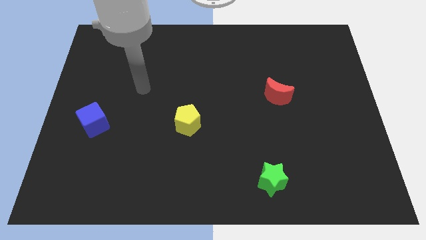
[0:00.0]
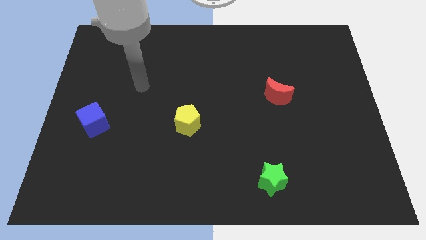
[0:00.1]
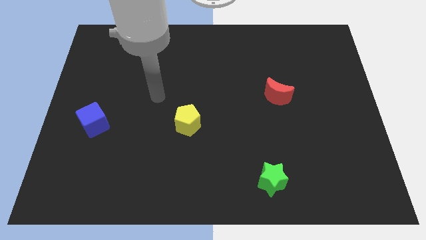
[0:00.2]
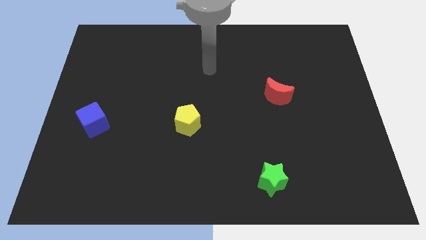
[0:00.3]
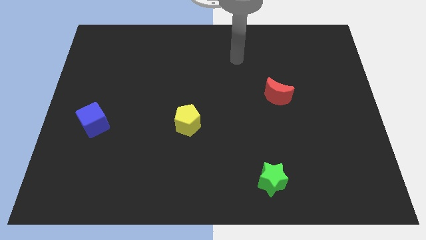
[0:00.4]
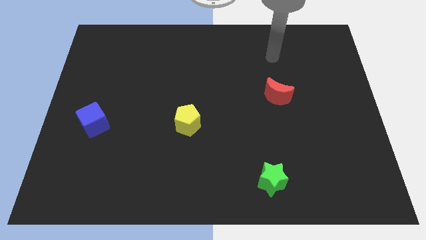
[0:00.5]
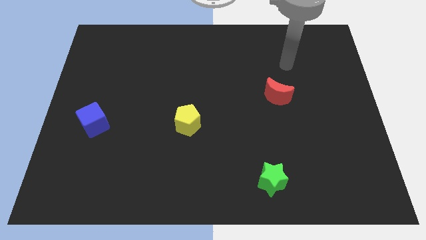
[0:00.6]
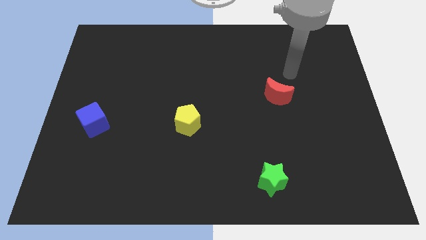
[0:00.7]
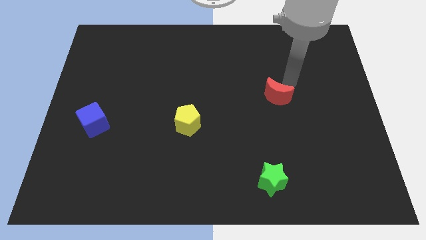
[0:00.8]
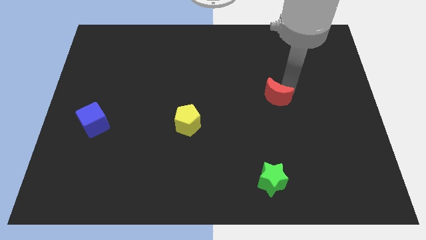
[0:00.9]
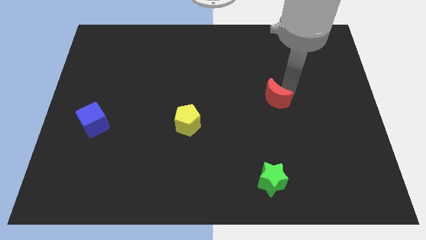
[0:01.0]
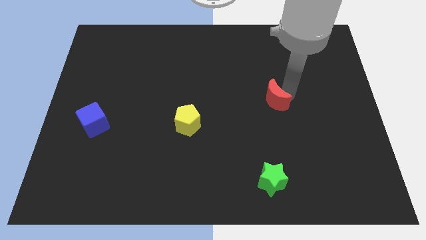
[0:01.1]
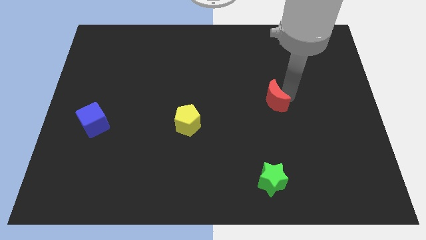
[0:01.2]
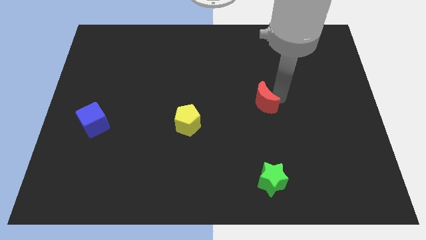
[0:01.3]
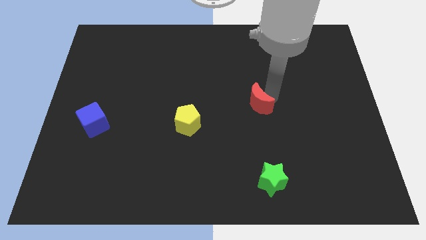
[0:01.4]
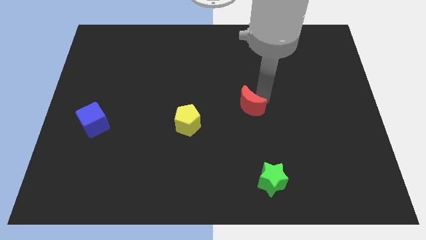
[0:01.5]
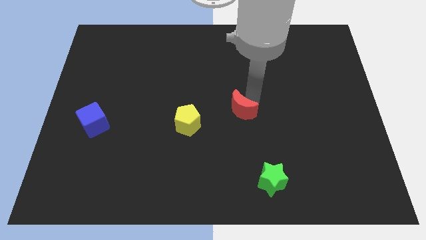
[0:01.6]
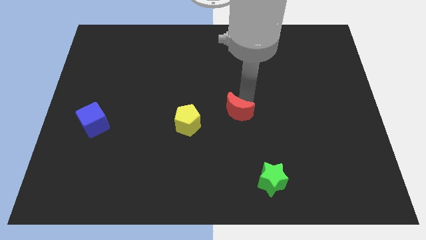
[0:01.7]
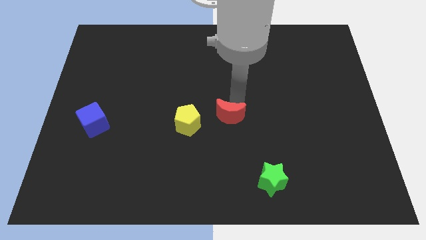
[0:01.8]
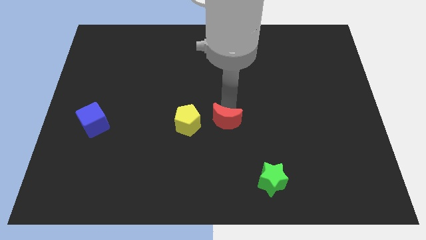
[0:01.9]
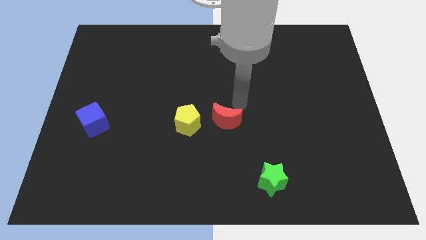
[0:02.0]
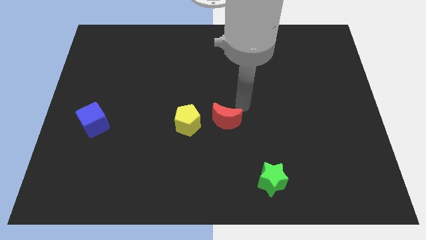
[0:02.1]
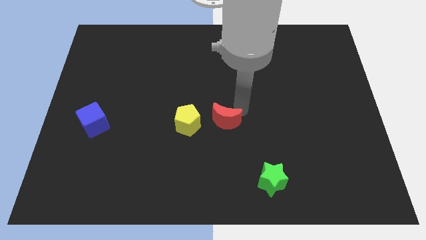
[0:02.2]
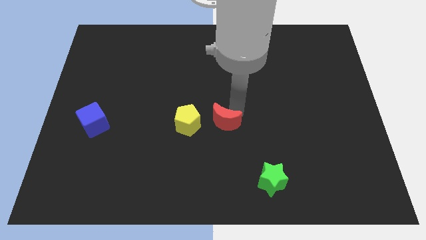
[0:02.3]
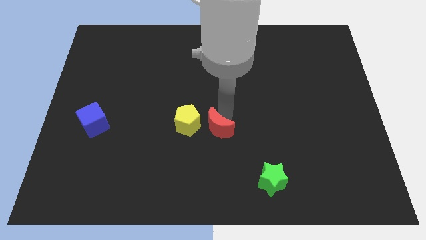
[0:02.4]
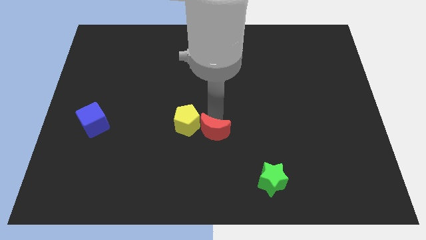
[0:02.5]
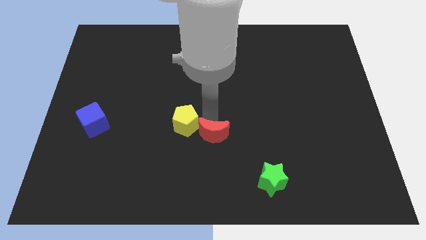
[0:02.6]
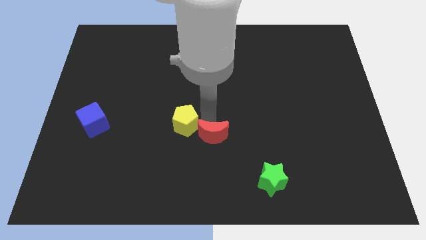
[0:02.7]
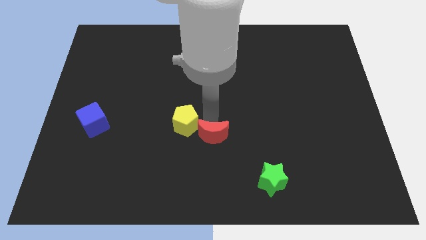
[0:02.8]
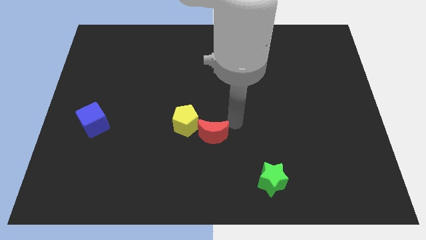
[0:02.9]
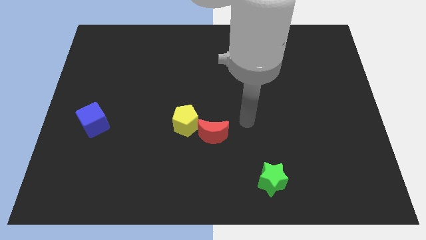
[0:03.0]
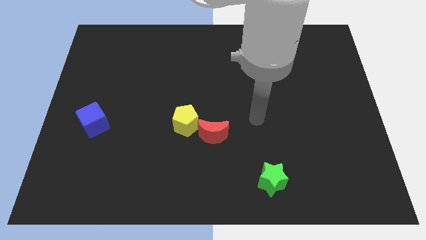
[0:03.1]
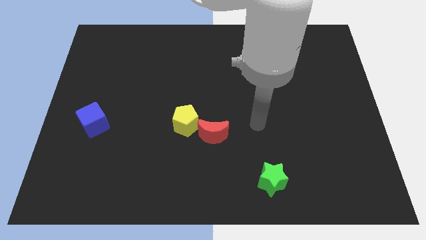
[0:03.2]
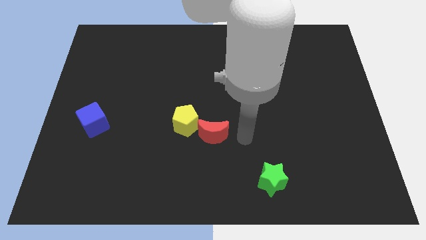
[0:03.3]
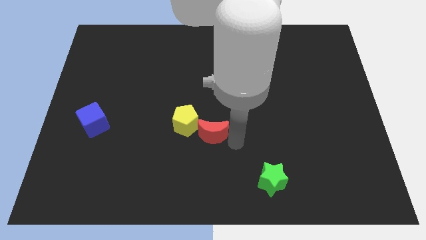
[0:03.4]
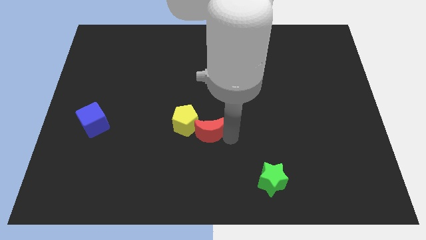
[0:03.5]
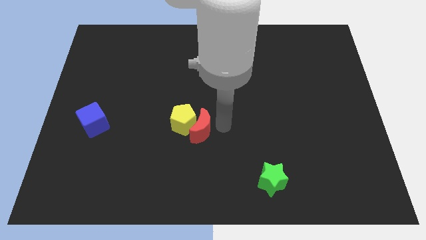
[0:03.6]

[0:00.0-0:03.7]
slide the red moon close to the yellow block

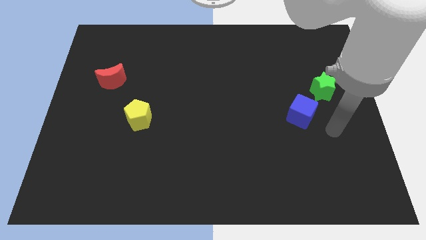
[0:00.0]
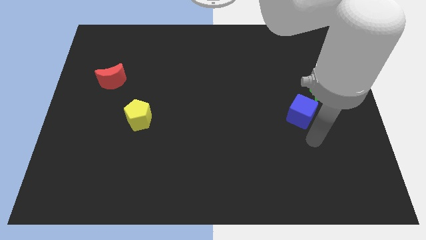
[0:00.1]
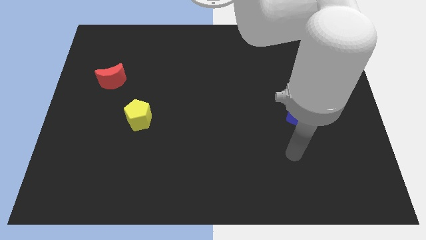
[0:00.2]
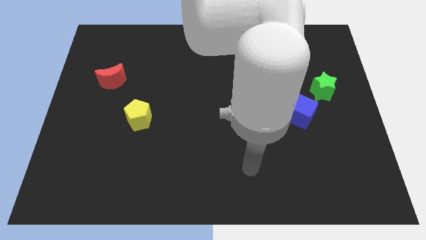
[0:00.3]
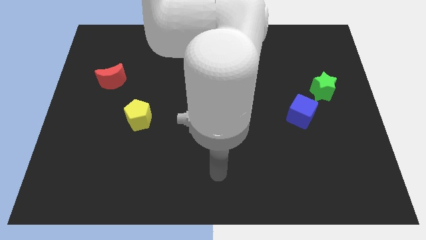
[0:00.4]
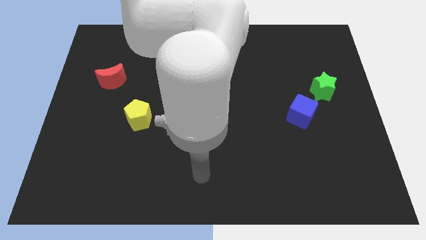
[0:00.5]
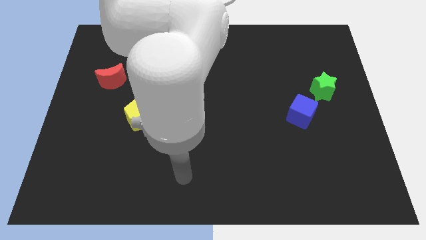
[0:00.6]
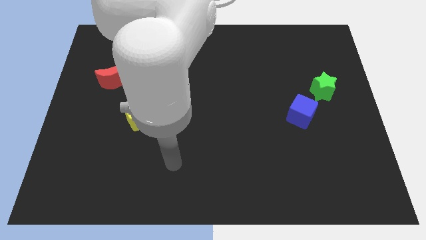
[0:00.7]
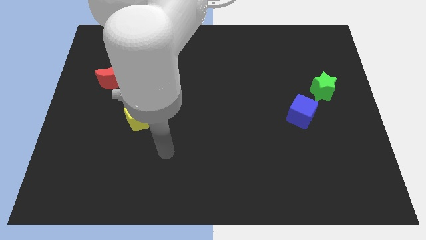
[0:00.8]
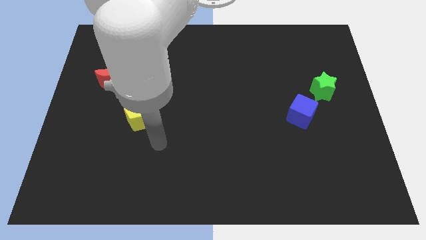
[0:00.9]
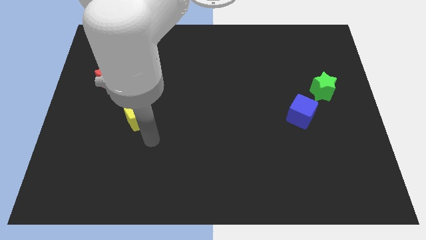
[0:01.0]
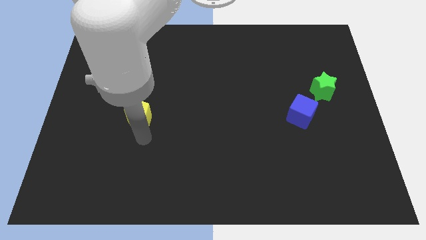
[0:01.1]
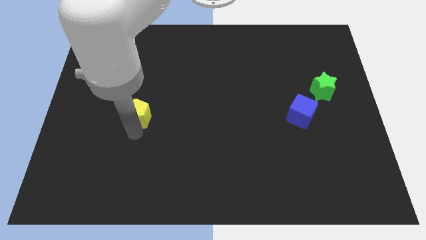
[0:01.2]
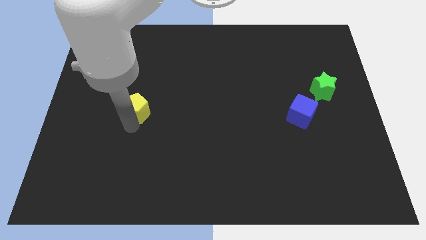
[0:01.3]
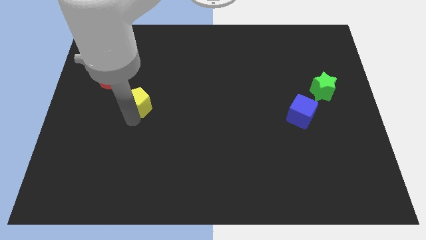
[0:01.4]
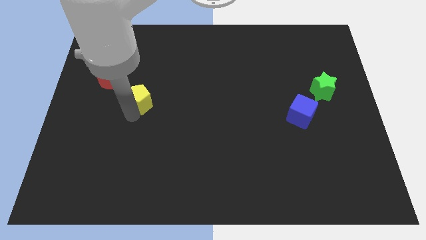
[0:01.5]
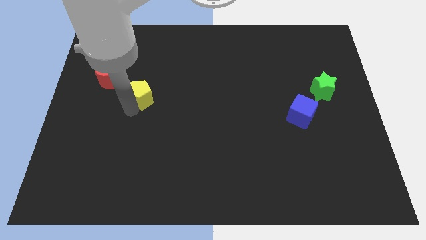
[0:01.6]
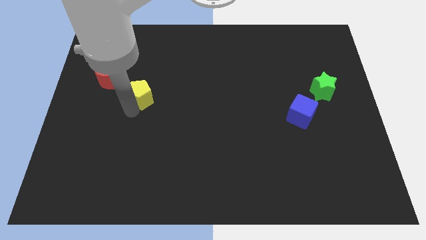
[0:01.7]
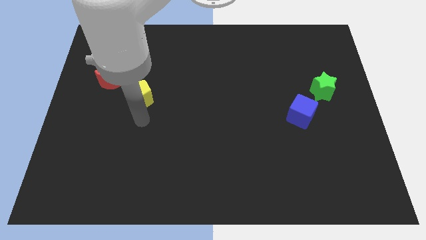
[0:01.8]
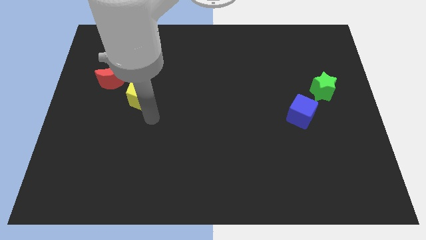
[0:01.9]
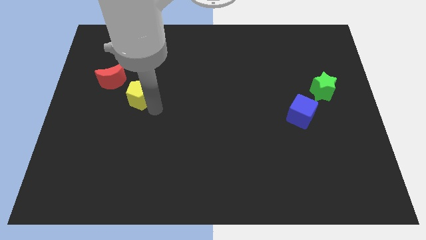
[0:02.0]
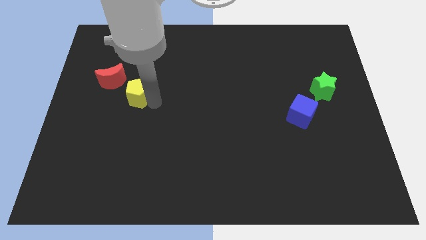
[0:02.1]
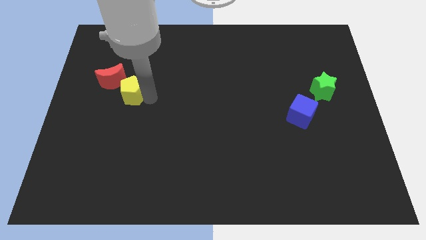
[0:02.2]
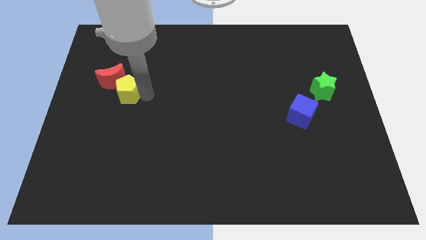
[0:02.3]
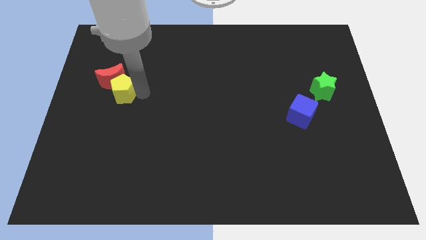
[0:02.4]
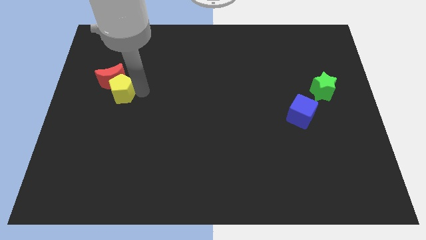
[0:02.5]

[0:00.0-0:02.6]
slide the yellow pentagon towards the red moon

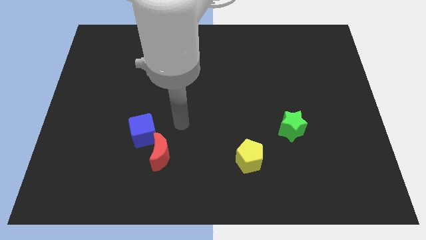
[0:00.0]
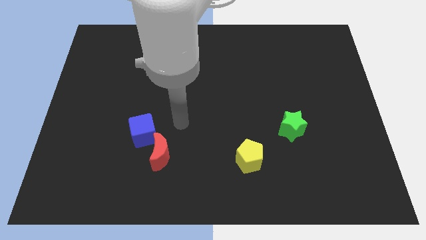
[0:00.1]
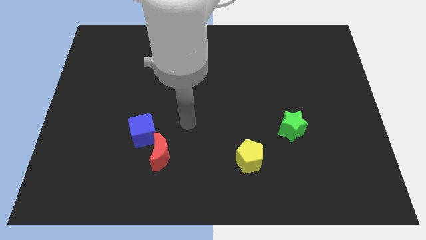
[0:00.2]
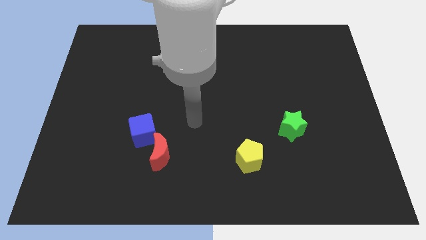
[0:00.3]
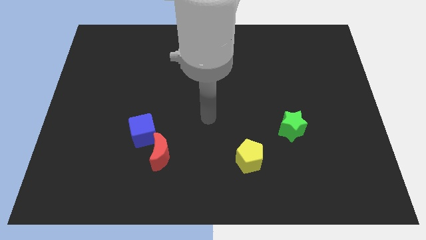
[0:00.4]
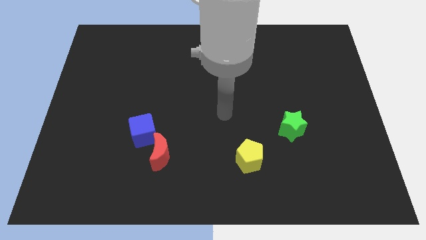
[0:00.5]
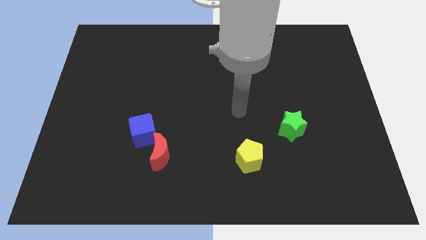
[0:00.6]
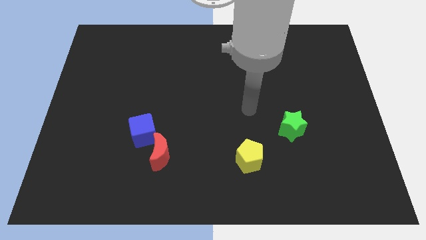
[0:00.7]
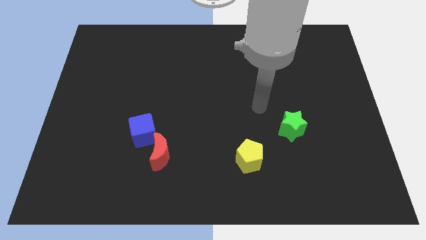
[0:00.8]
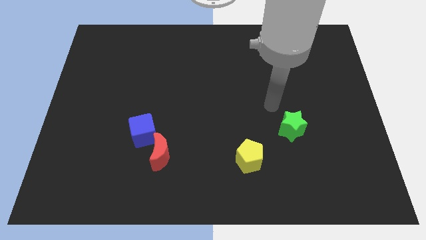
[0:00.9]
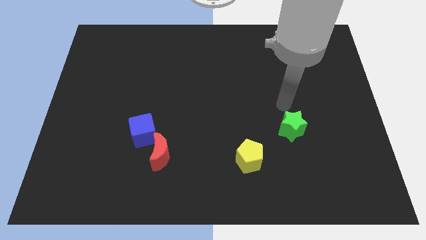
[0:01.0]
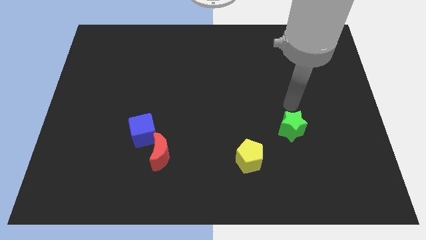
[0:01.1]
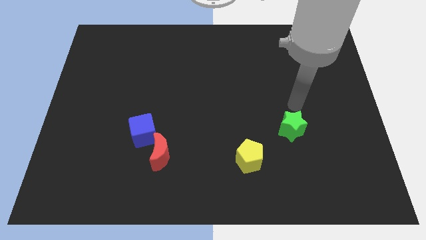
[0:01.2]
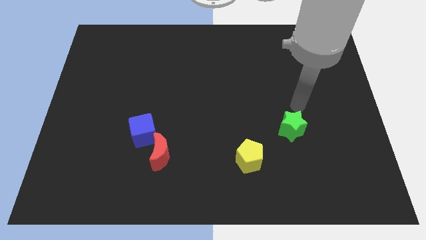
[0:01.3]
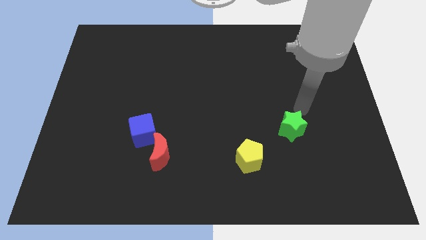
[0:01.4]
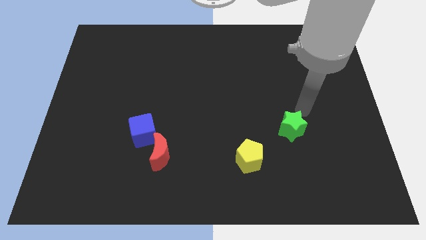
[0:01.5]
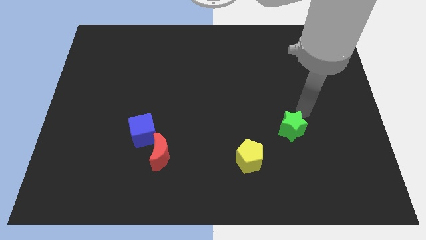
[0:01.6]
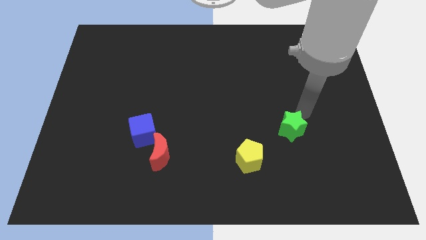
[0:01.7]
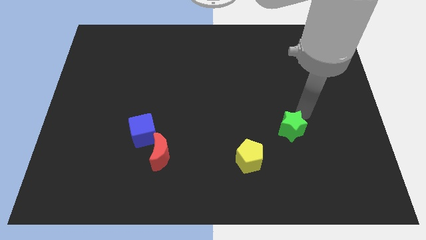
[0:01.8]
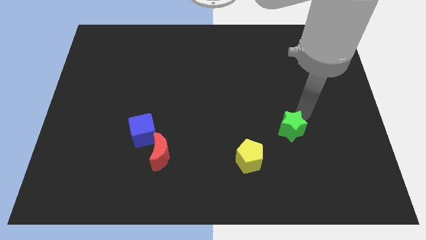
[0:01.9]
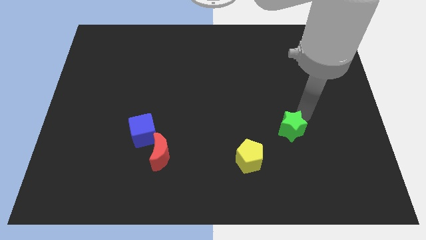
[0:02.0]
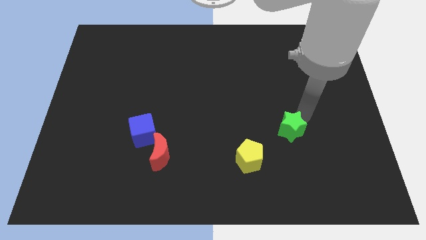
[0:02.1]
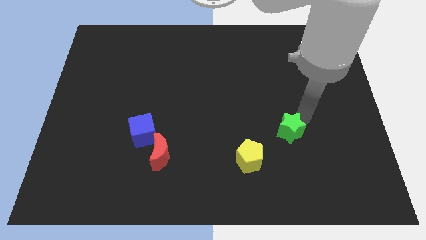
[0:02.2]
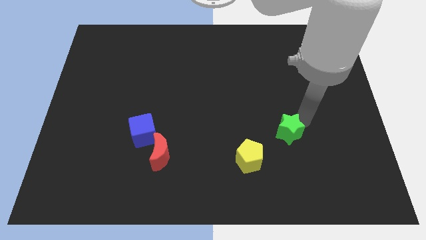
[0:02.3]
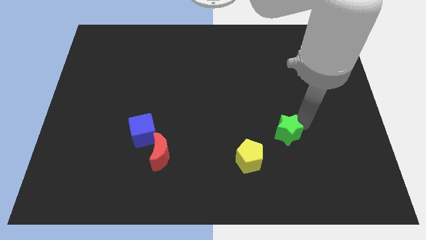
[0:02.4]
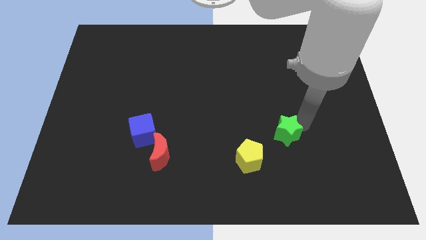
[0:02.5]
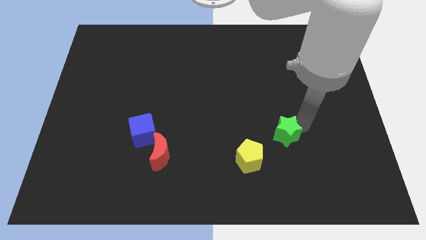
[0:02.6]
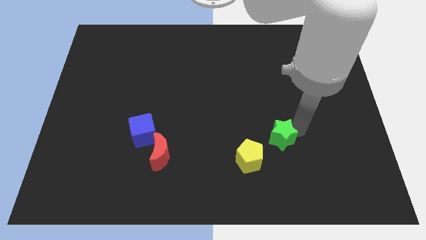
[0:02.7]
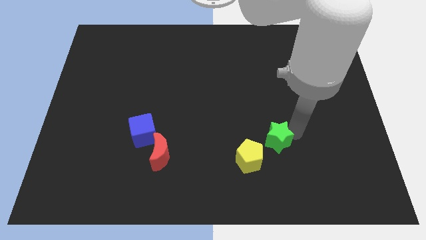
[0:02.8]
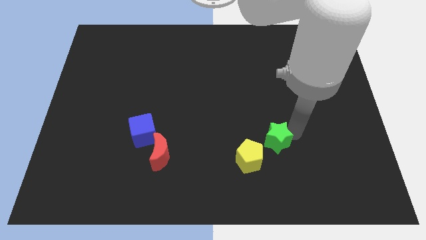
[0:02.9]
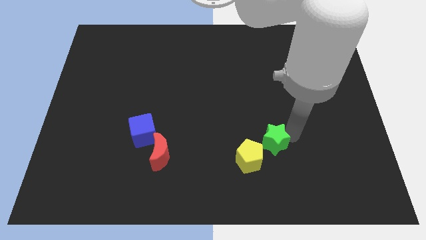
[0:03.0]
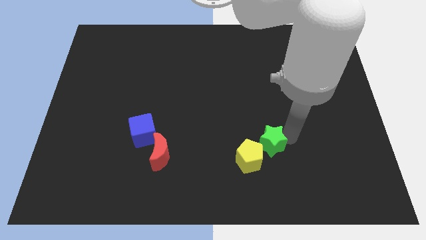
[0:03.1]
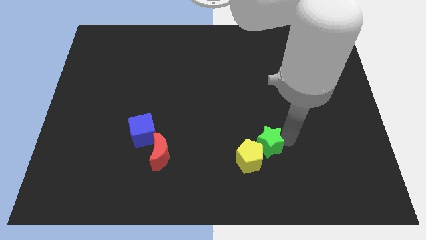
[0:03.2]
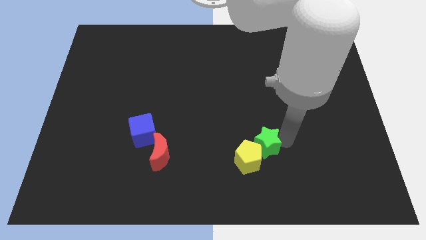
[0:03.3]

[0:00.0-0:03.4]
put the green star to the yellow block
